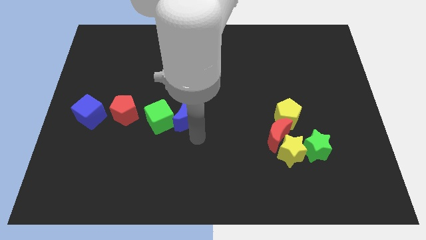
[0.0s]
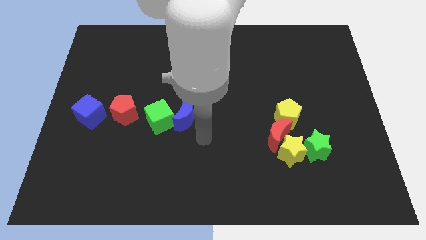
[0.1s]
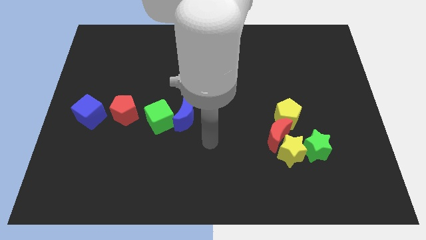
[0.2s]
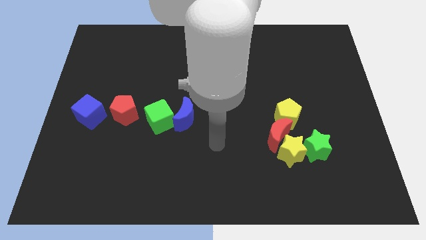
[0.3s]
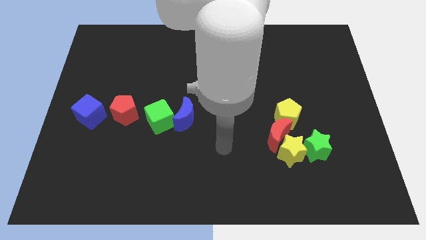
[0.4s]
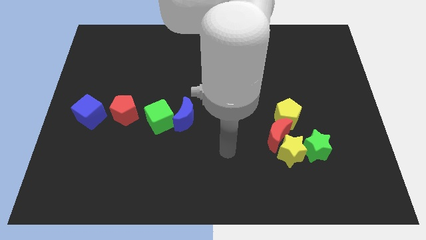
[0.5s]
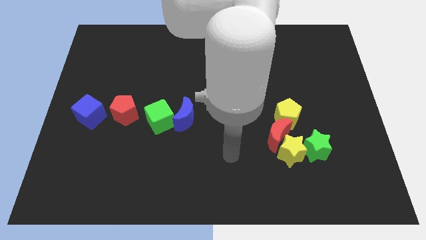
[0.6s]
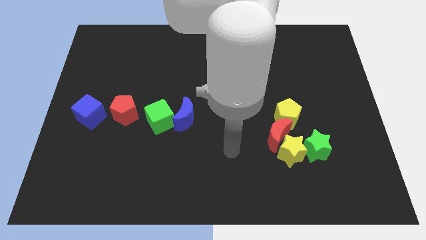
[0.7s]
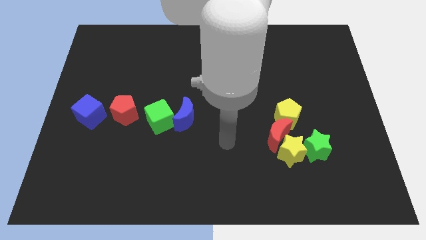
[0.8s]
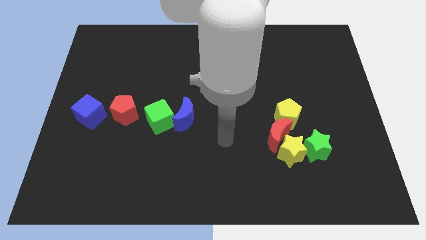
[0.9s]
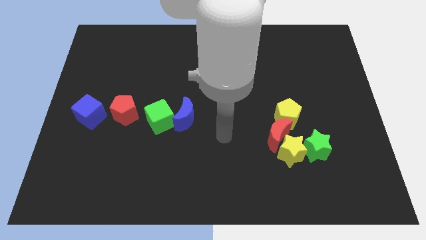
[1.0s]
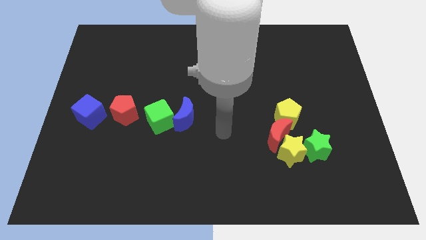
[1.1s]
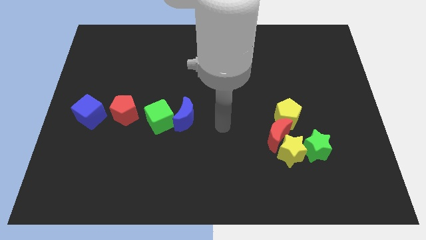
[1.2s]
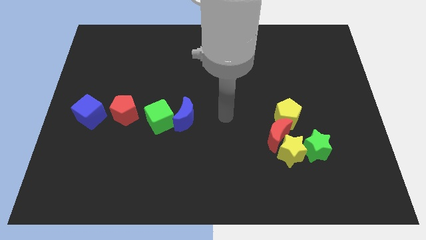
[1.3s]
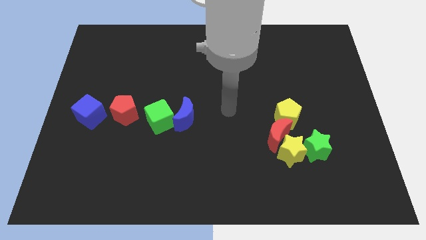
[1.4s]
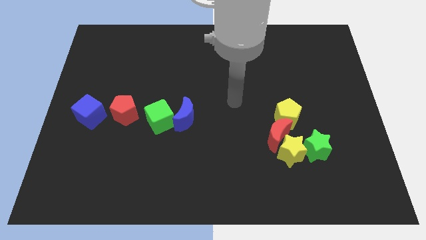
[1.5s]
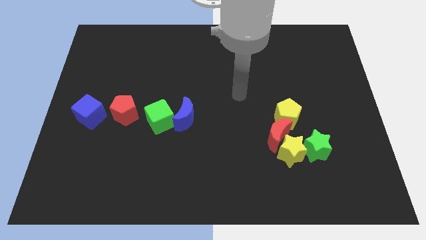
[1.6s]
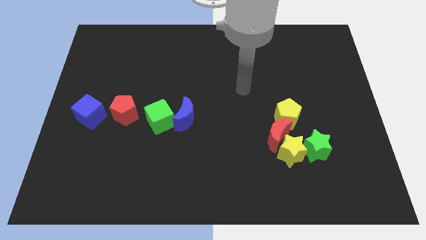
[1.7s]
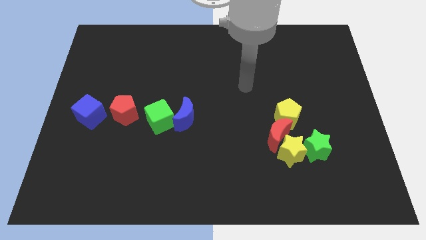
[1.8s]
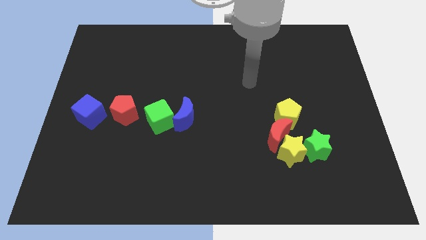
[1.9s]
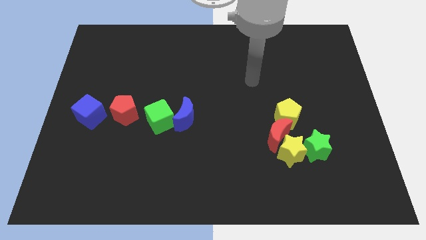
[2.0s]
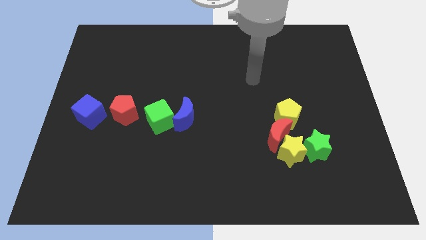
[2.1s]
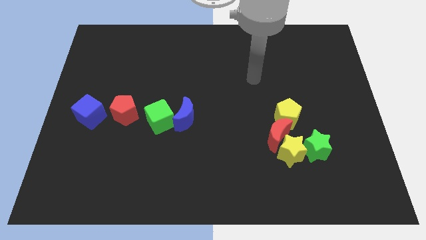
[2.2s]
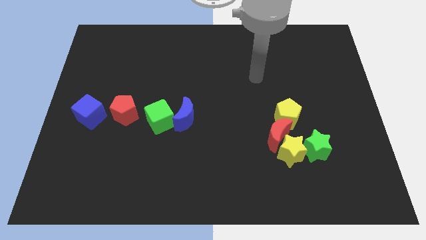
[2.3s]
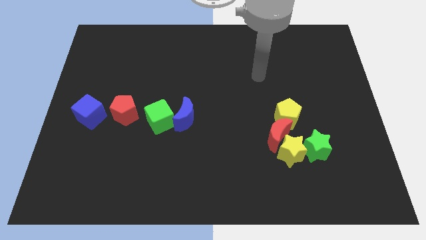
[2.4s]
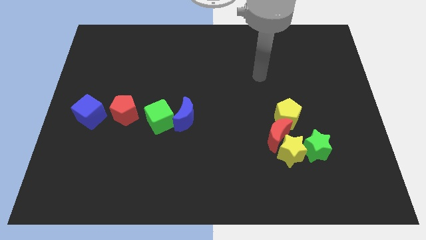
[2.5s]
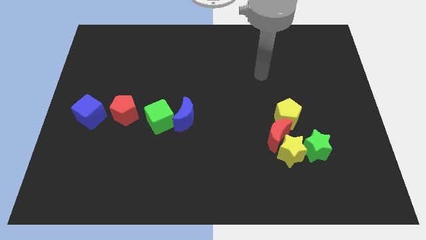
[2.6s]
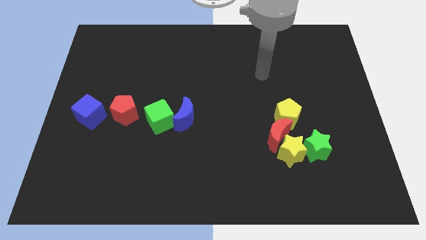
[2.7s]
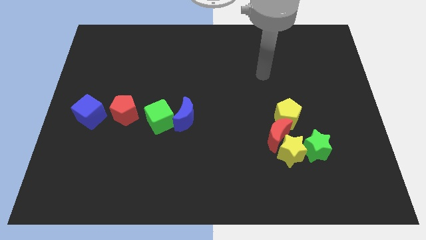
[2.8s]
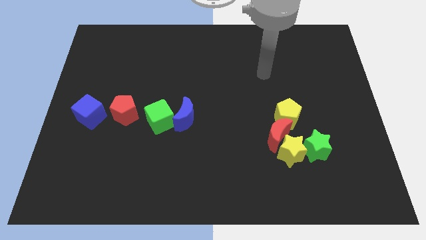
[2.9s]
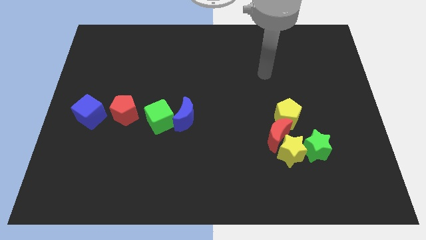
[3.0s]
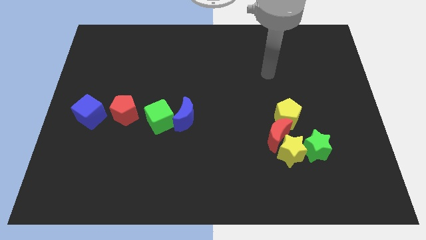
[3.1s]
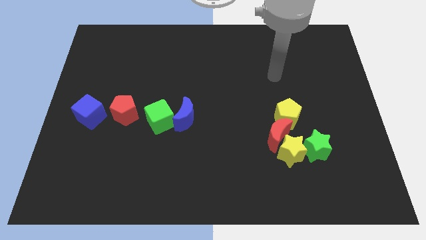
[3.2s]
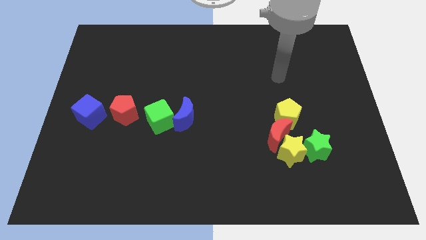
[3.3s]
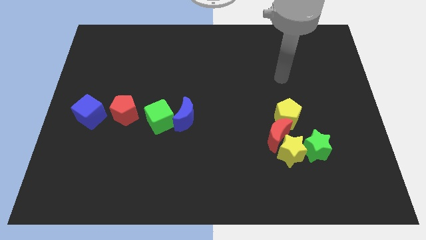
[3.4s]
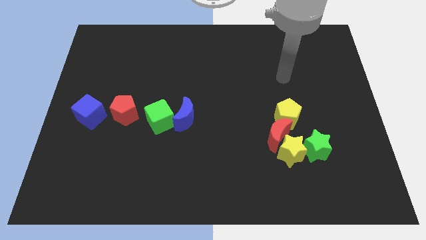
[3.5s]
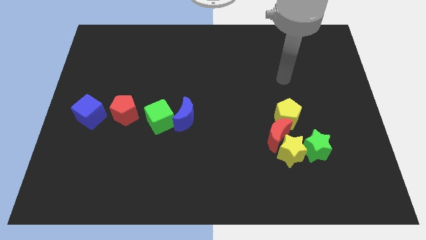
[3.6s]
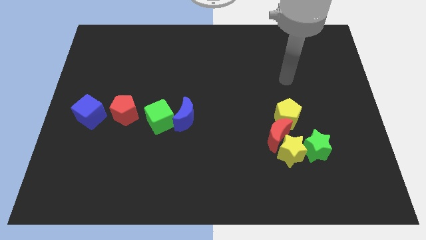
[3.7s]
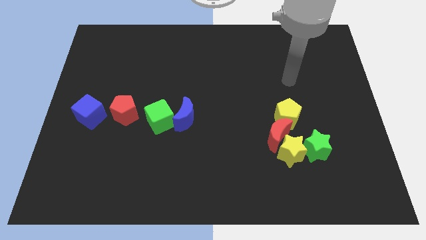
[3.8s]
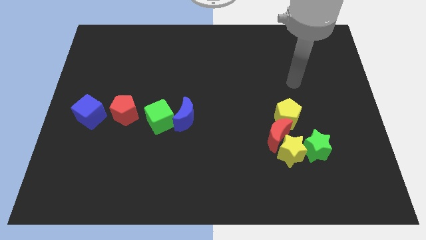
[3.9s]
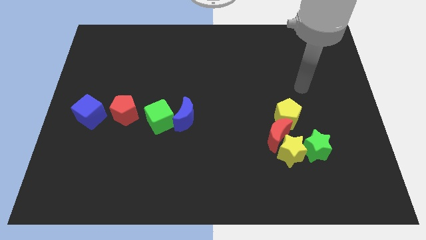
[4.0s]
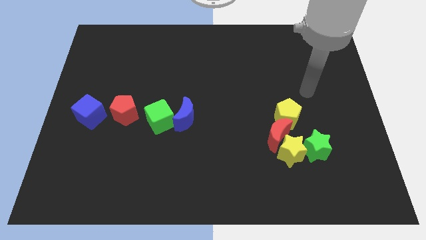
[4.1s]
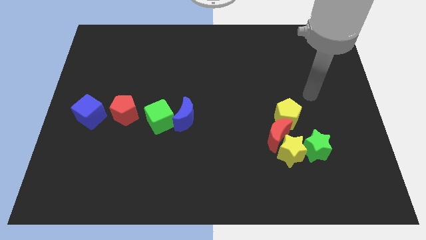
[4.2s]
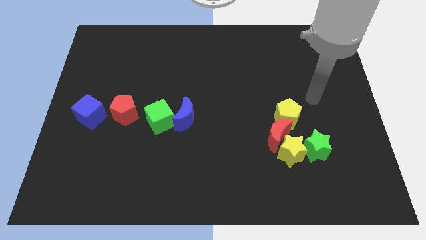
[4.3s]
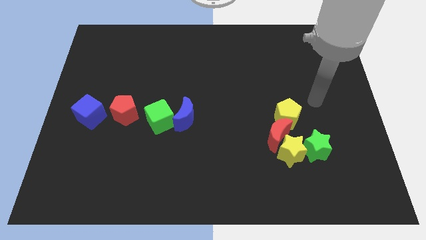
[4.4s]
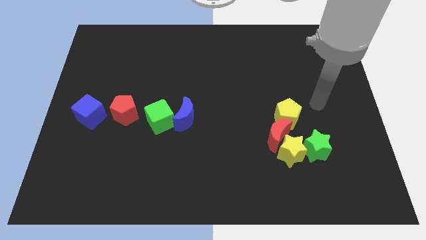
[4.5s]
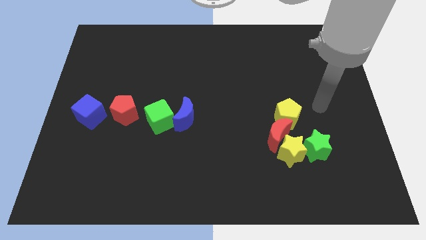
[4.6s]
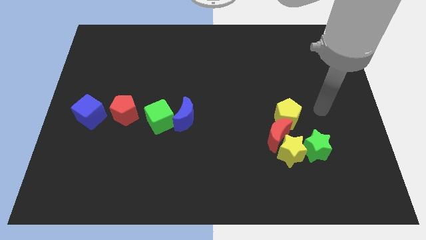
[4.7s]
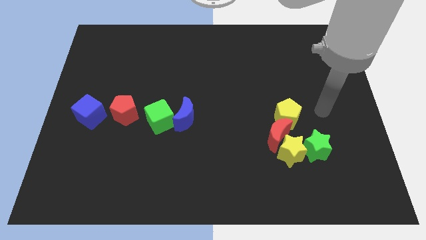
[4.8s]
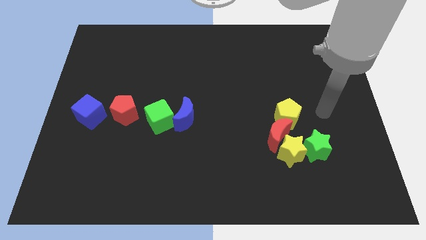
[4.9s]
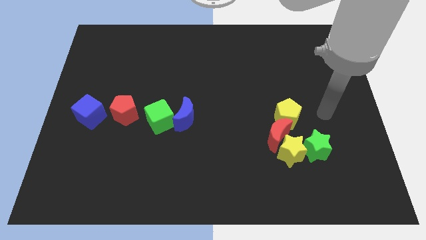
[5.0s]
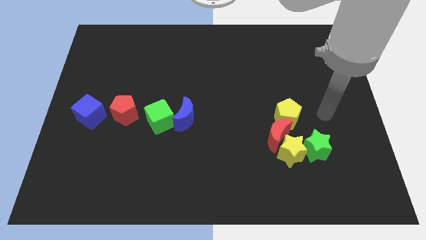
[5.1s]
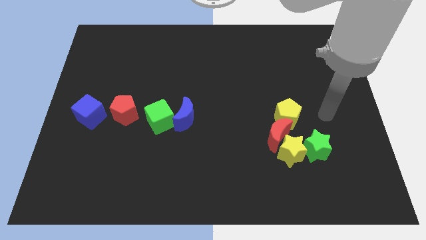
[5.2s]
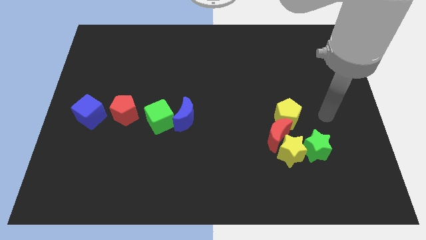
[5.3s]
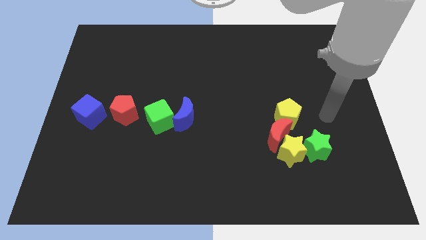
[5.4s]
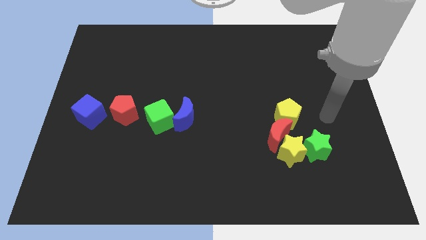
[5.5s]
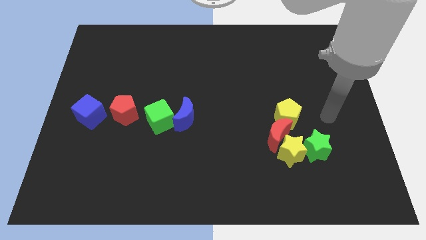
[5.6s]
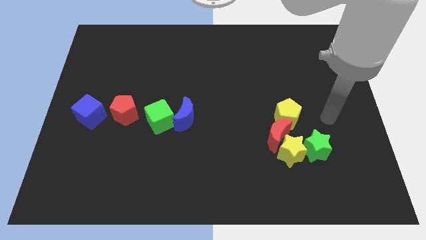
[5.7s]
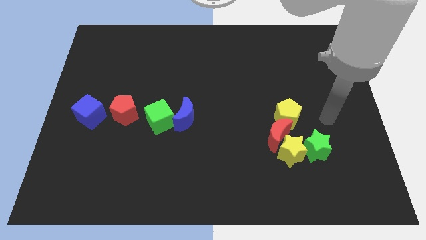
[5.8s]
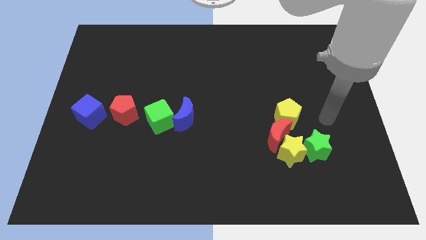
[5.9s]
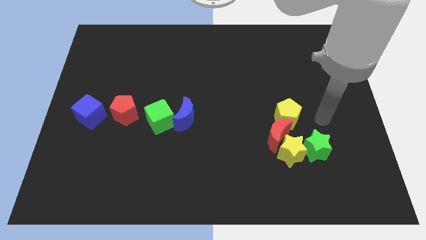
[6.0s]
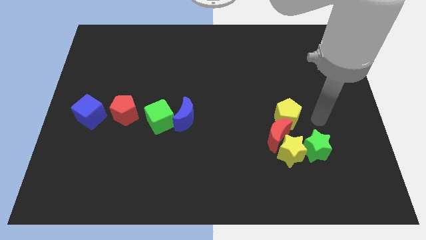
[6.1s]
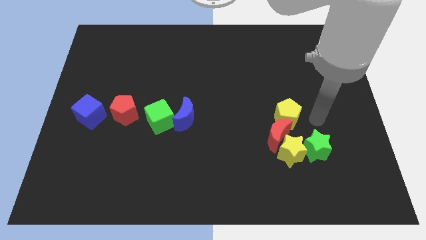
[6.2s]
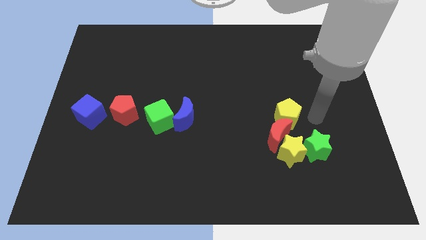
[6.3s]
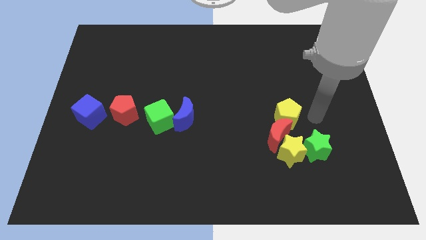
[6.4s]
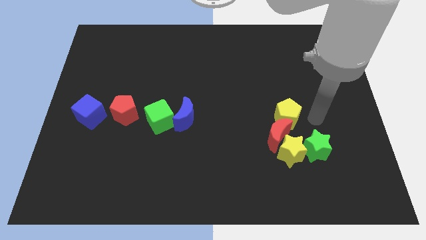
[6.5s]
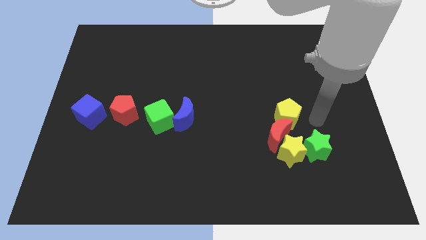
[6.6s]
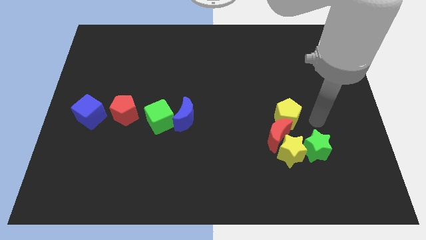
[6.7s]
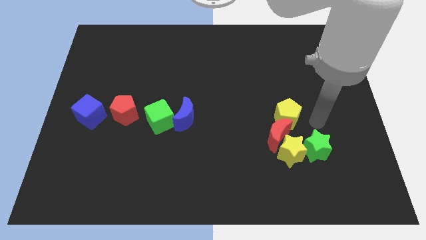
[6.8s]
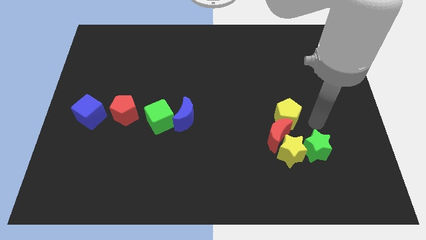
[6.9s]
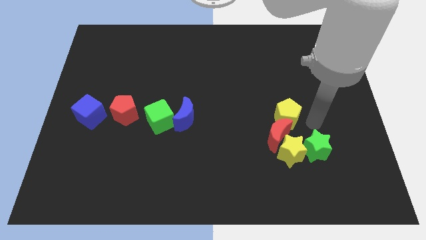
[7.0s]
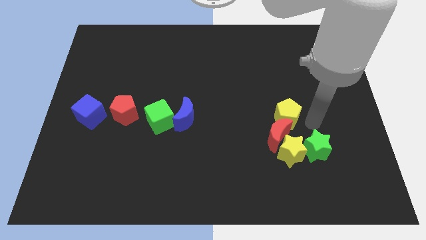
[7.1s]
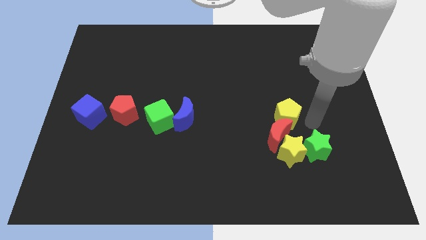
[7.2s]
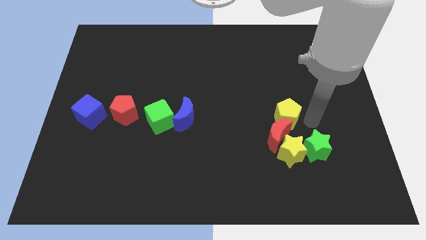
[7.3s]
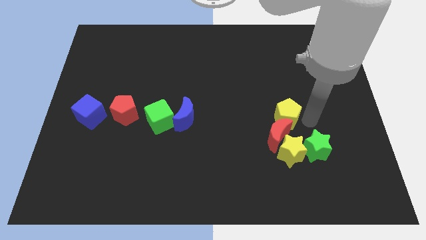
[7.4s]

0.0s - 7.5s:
move arm near yellow pentagon

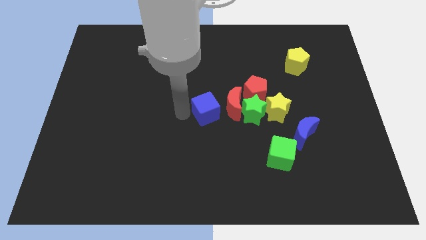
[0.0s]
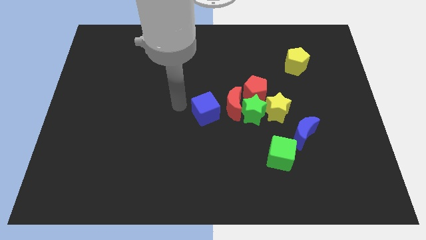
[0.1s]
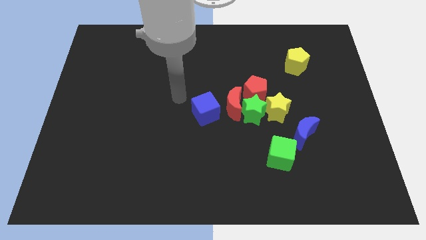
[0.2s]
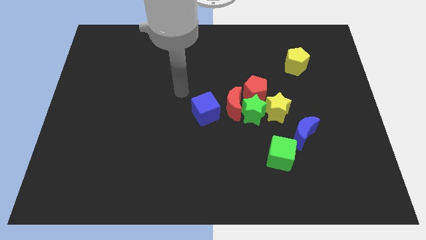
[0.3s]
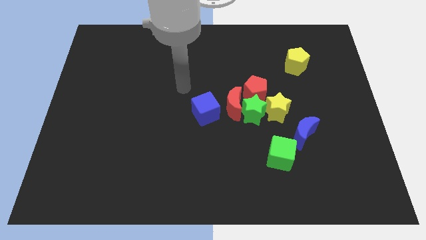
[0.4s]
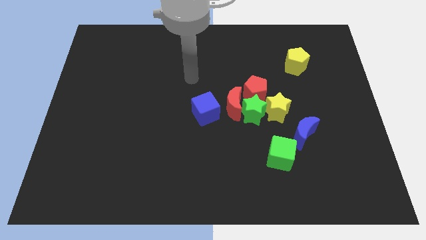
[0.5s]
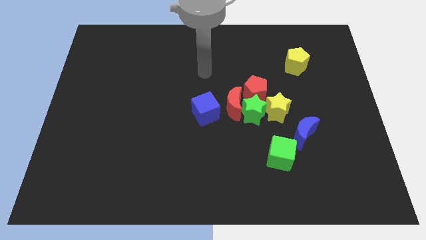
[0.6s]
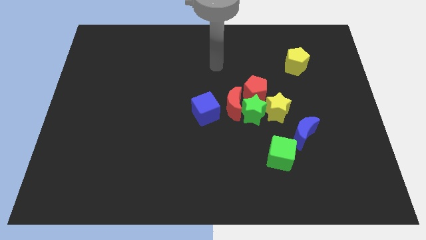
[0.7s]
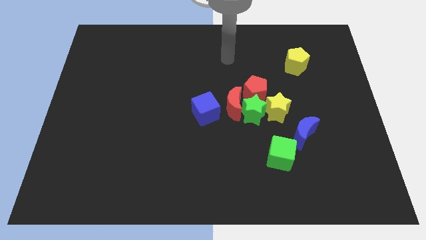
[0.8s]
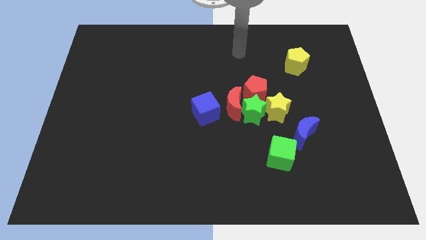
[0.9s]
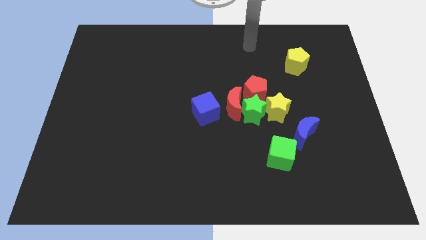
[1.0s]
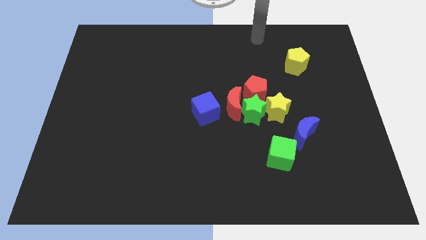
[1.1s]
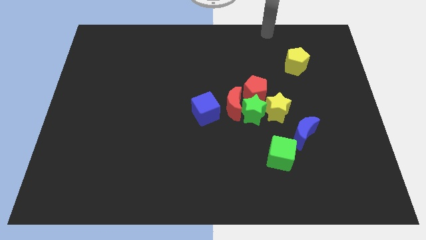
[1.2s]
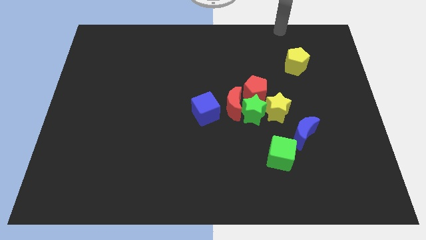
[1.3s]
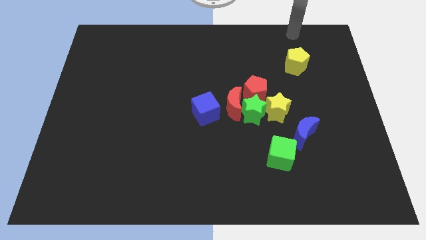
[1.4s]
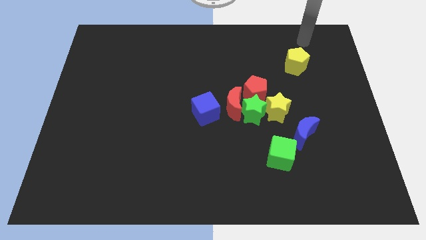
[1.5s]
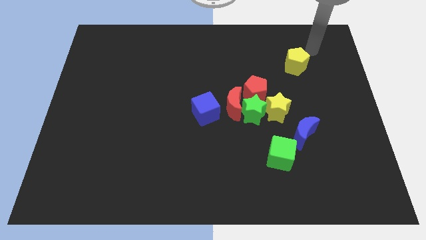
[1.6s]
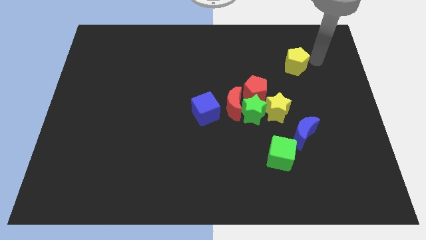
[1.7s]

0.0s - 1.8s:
move your arm away form blue cube
